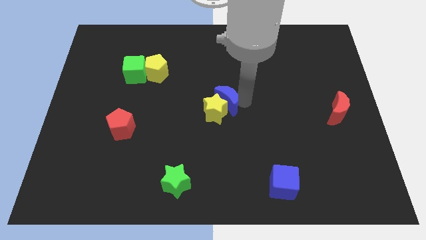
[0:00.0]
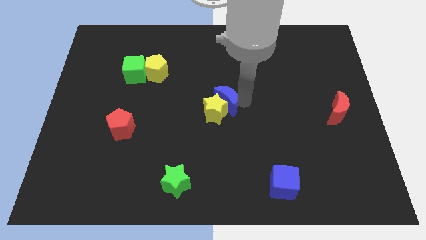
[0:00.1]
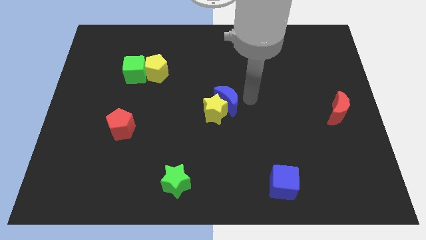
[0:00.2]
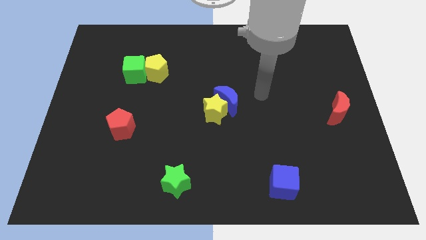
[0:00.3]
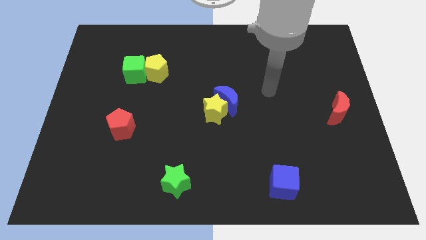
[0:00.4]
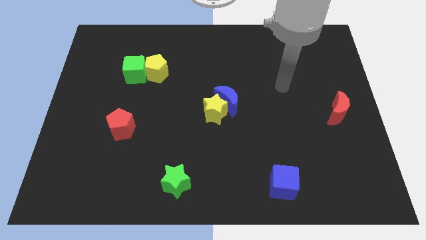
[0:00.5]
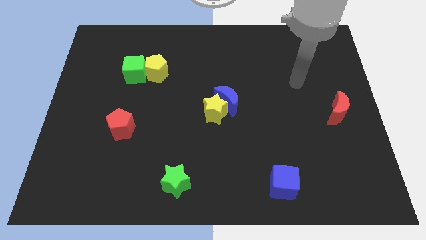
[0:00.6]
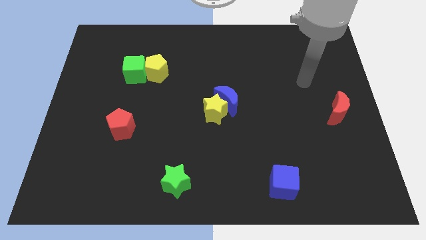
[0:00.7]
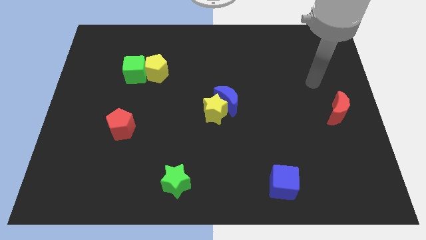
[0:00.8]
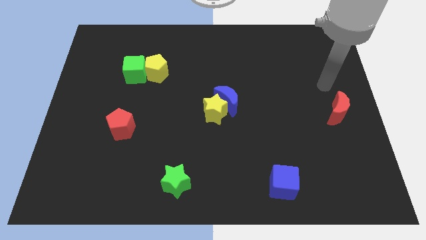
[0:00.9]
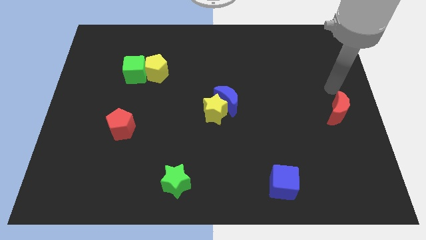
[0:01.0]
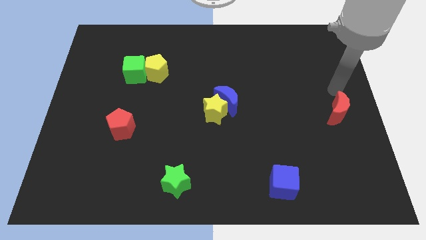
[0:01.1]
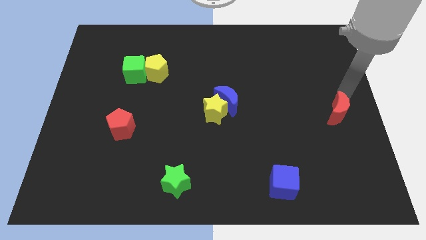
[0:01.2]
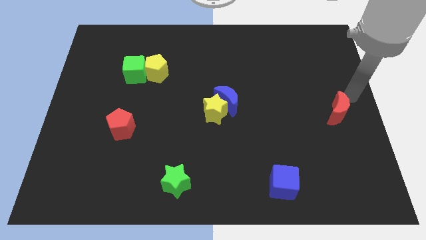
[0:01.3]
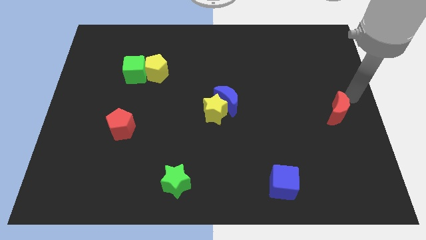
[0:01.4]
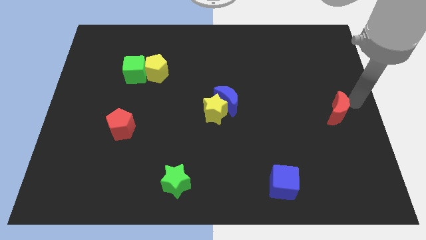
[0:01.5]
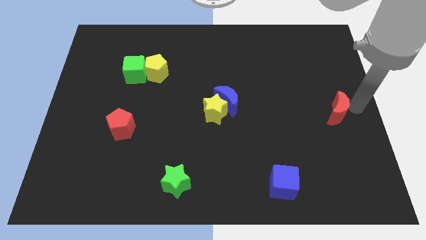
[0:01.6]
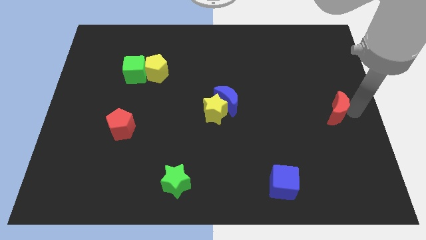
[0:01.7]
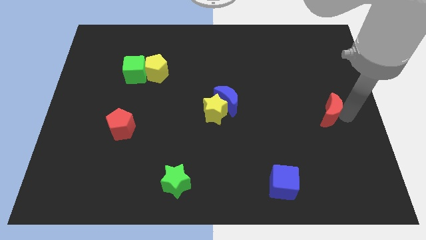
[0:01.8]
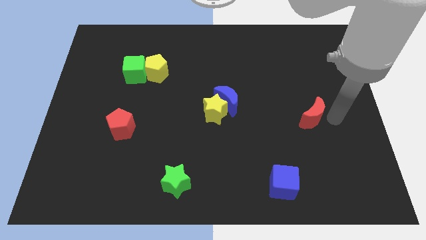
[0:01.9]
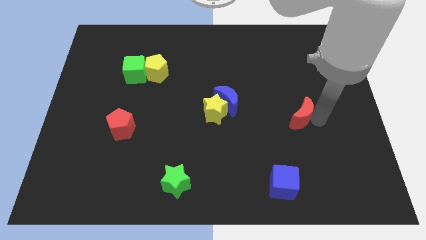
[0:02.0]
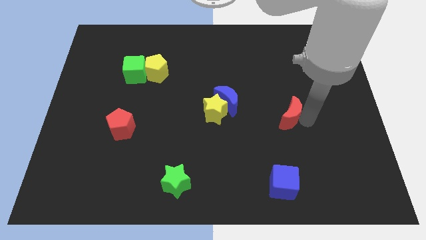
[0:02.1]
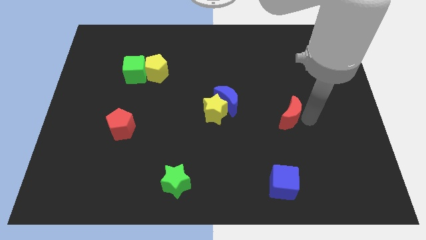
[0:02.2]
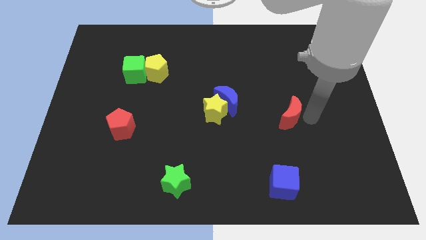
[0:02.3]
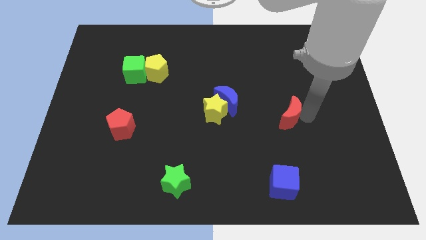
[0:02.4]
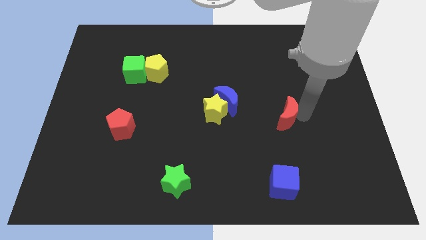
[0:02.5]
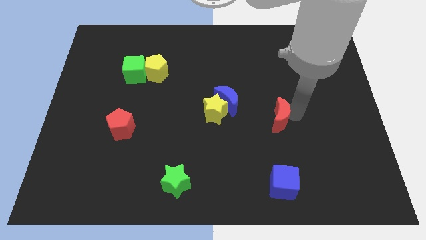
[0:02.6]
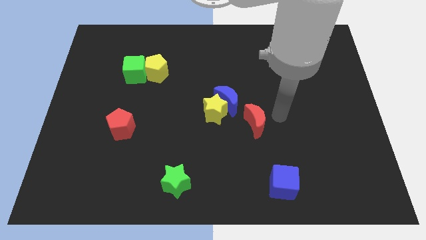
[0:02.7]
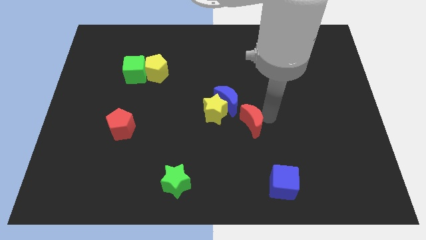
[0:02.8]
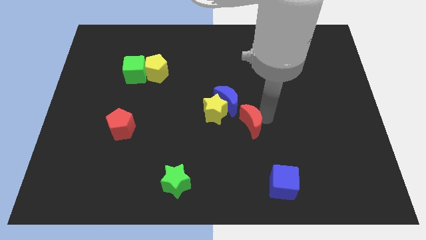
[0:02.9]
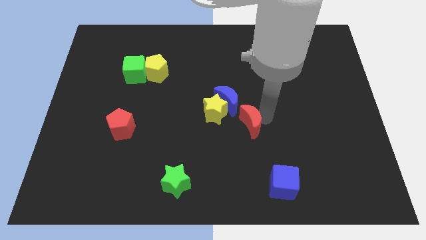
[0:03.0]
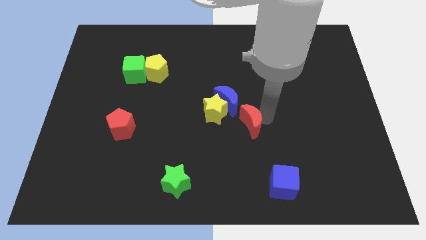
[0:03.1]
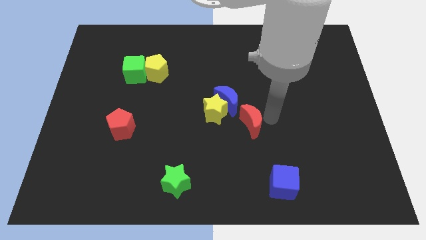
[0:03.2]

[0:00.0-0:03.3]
move the red moon below blue moon diagonally

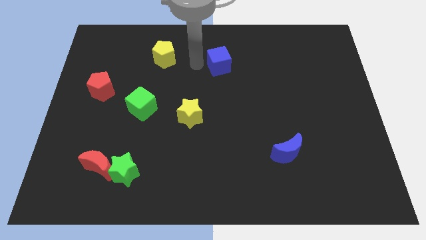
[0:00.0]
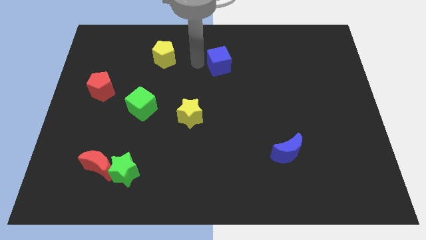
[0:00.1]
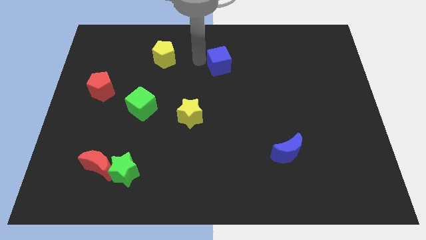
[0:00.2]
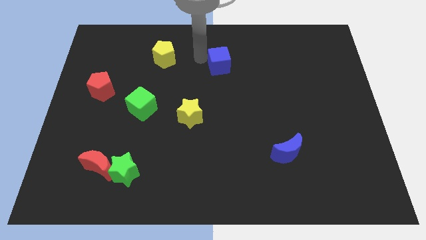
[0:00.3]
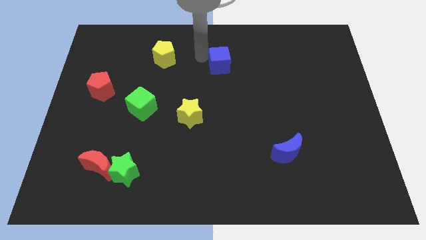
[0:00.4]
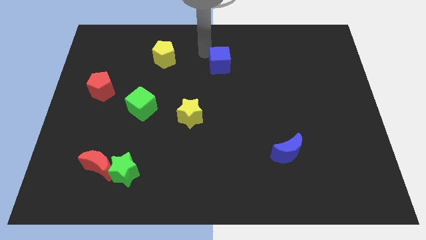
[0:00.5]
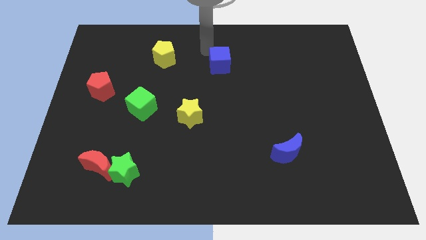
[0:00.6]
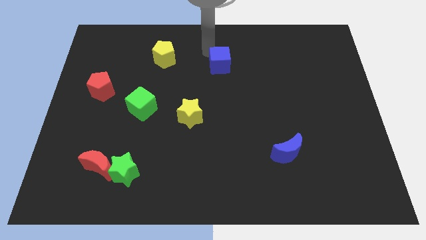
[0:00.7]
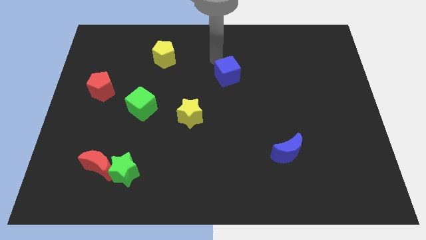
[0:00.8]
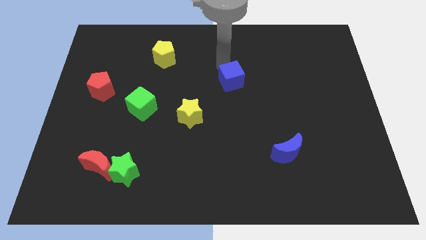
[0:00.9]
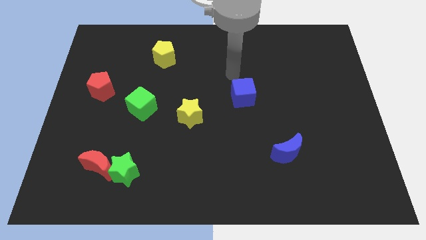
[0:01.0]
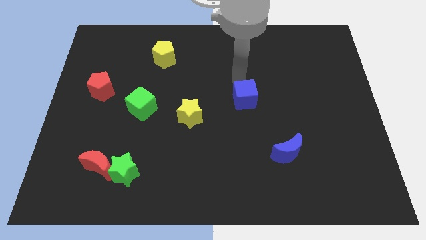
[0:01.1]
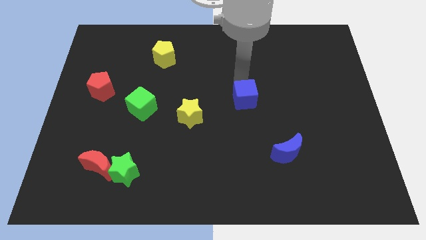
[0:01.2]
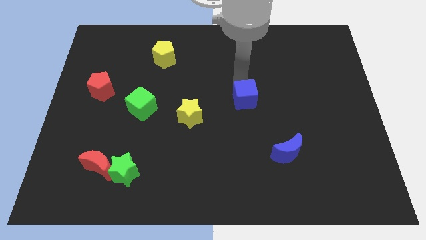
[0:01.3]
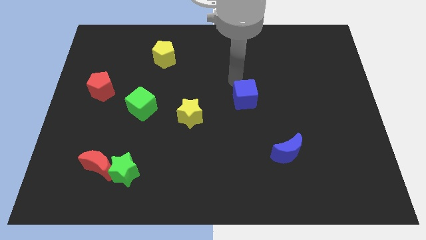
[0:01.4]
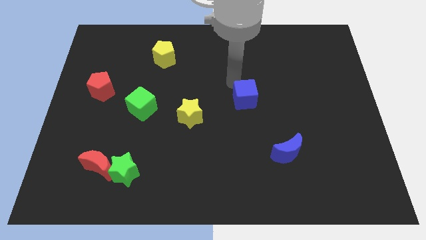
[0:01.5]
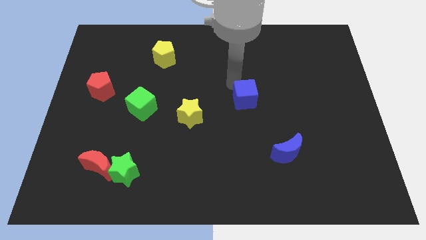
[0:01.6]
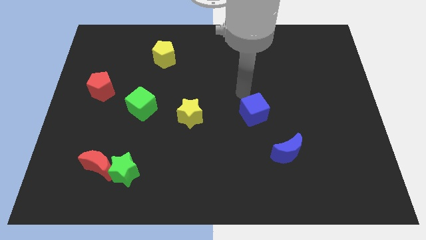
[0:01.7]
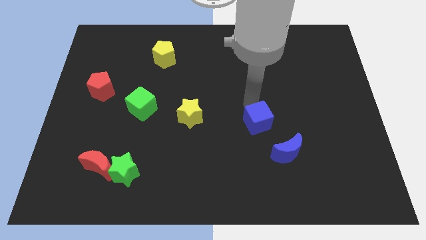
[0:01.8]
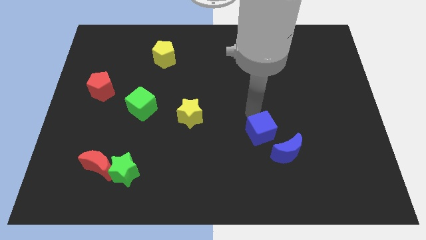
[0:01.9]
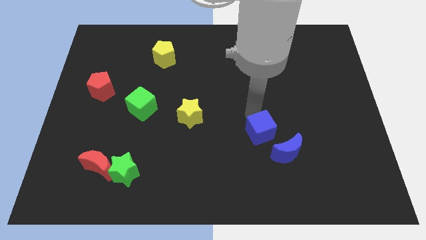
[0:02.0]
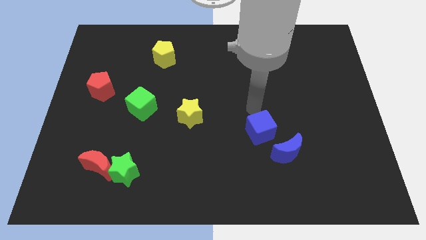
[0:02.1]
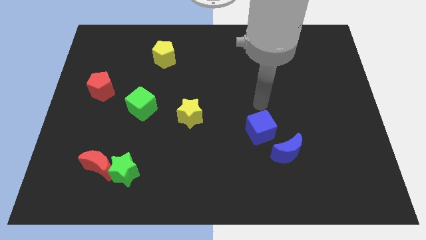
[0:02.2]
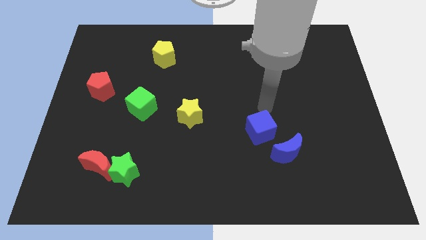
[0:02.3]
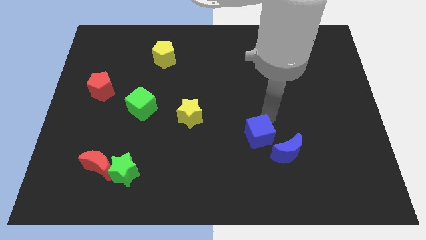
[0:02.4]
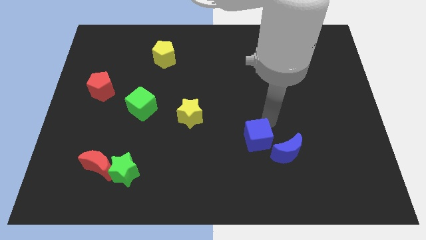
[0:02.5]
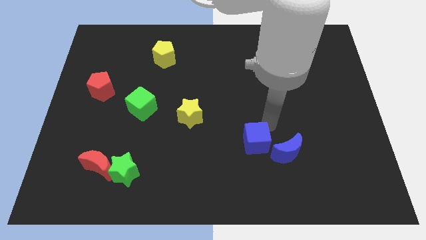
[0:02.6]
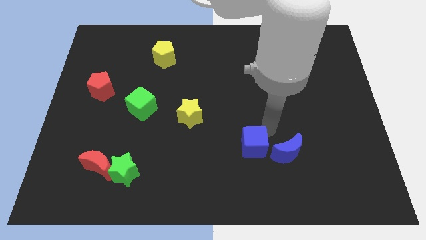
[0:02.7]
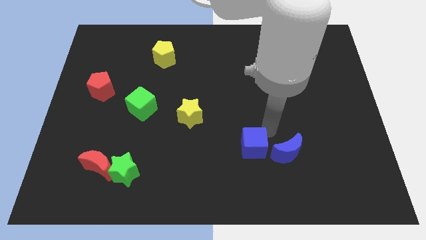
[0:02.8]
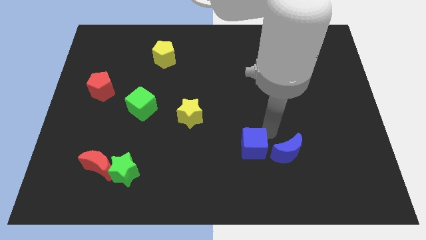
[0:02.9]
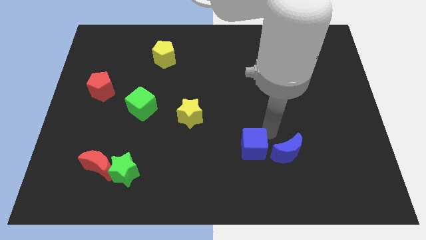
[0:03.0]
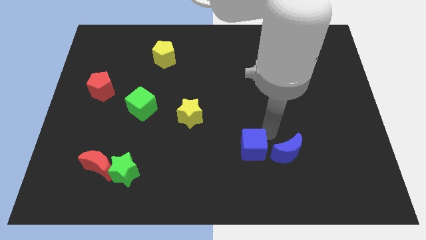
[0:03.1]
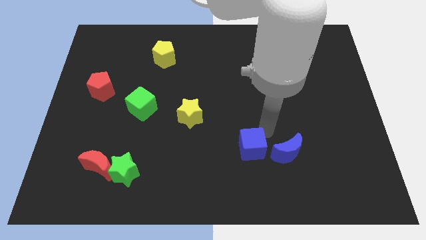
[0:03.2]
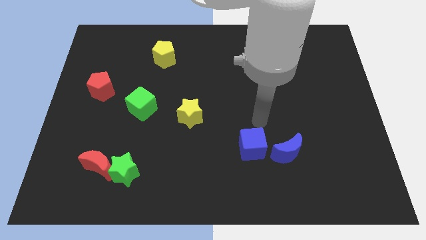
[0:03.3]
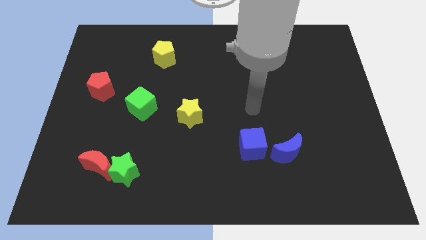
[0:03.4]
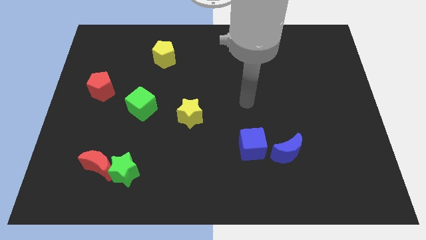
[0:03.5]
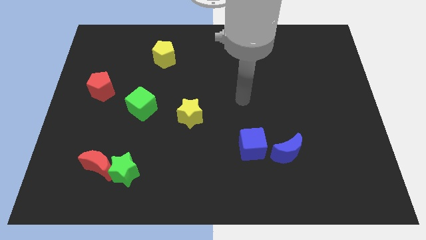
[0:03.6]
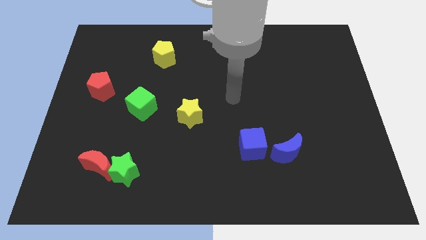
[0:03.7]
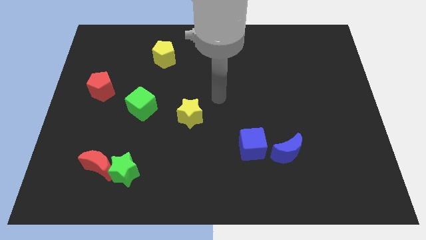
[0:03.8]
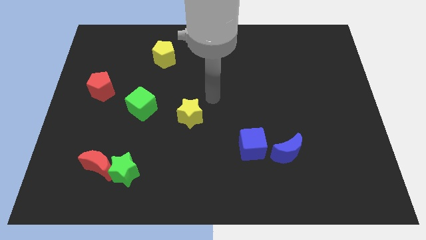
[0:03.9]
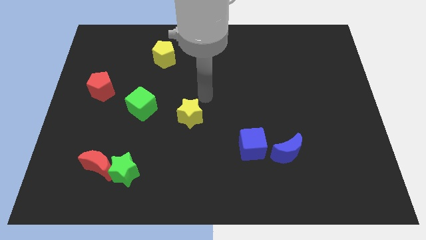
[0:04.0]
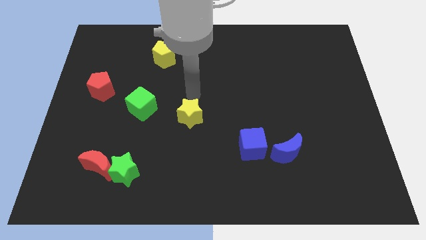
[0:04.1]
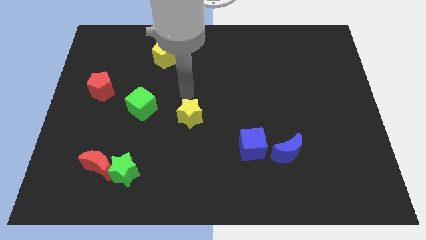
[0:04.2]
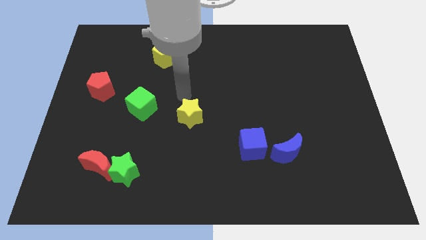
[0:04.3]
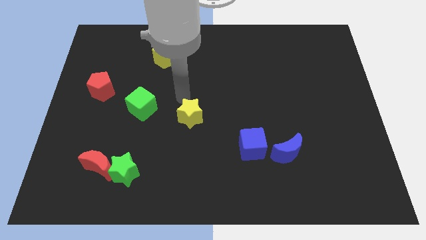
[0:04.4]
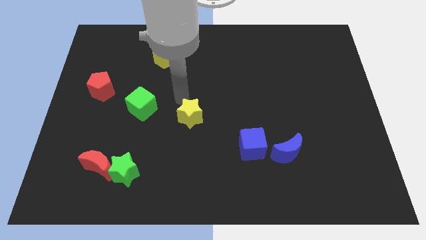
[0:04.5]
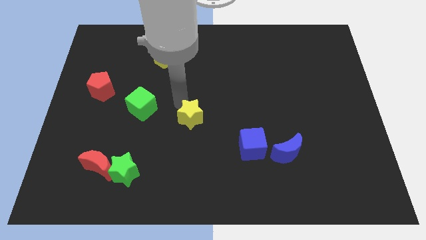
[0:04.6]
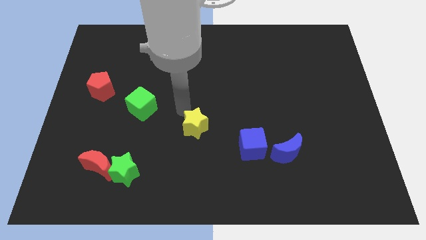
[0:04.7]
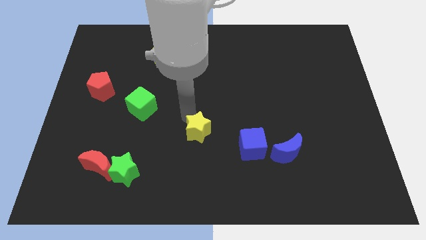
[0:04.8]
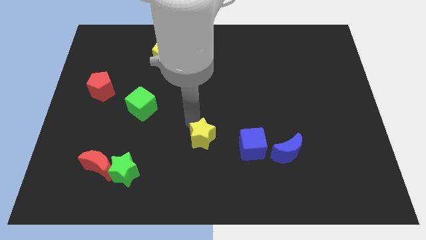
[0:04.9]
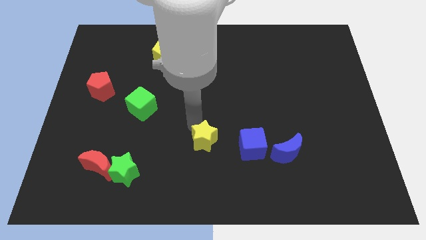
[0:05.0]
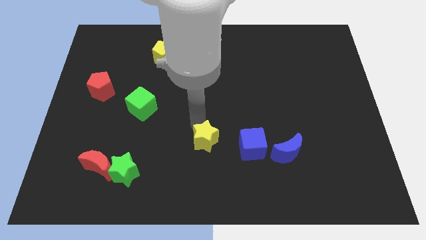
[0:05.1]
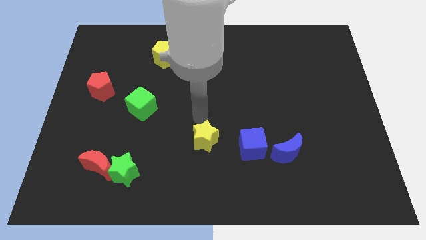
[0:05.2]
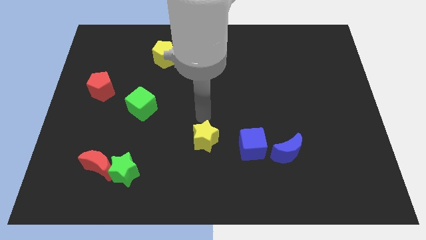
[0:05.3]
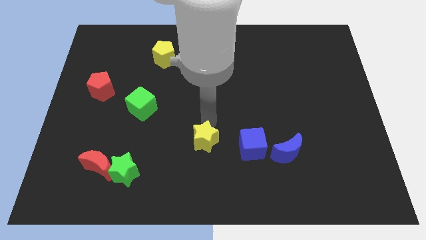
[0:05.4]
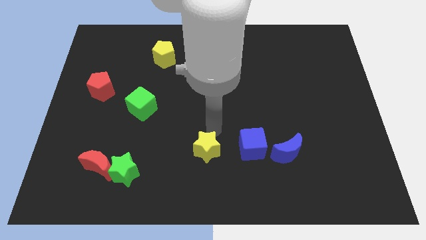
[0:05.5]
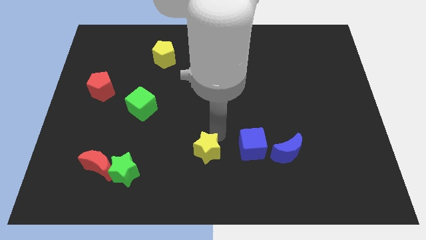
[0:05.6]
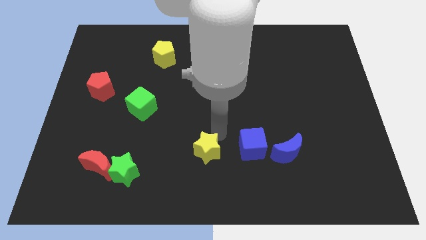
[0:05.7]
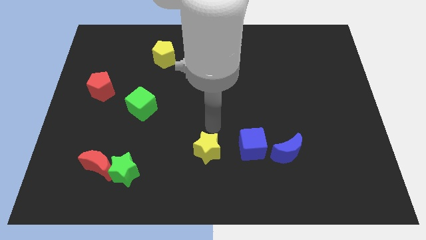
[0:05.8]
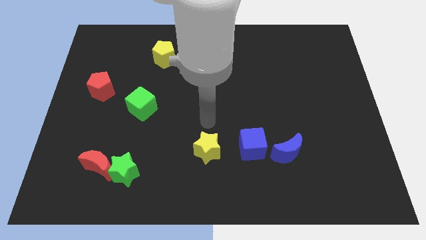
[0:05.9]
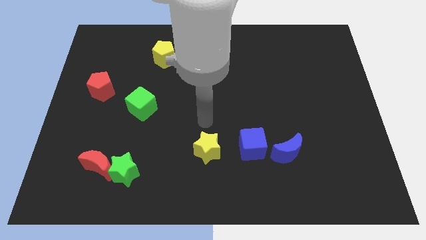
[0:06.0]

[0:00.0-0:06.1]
put the blue cube and yellow star to the left side of the blue crescent
